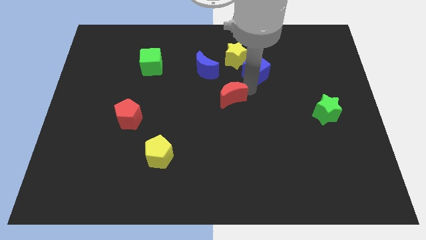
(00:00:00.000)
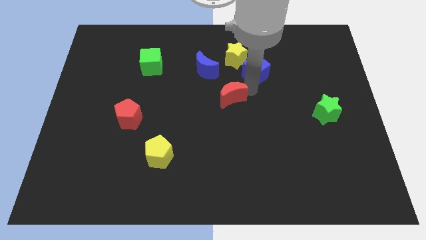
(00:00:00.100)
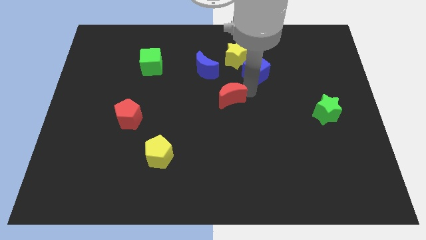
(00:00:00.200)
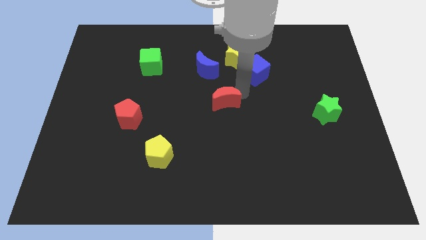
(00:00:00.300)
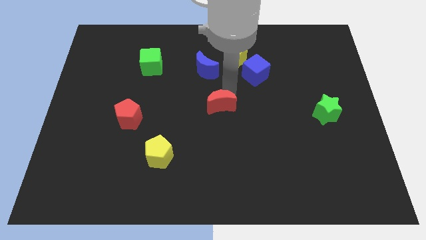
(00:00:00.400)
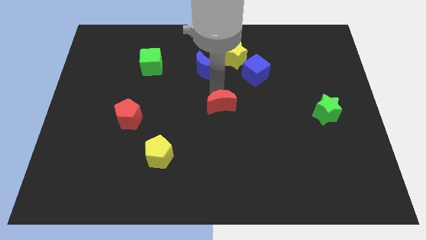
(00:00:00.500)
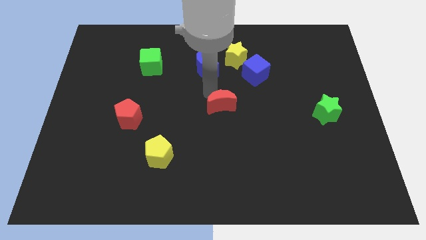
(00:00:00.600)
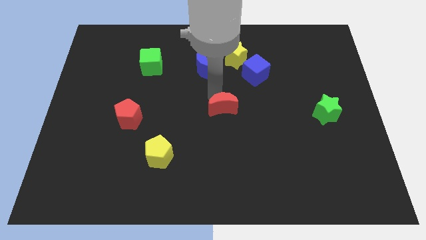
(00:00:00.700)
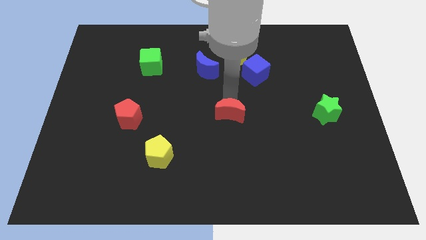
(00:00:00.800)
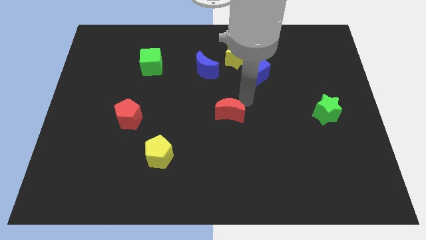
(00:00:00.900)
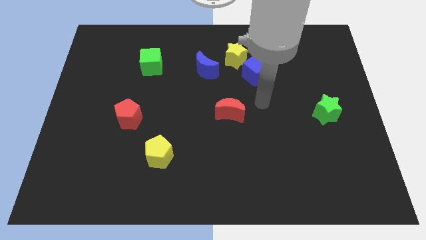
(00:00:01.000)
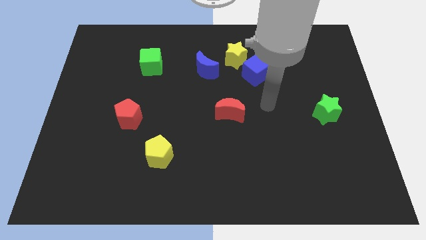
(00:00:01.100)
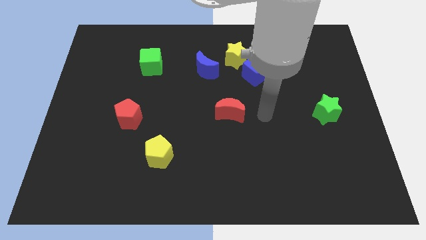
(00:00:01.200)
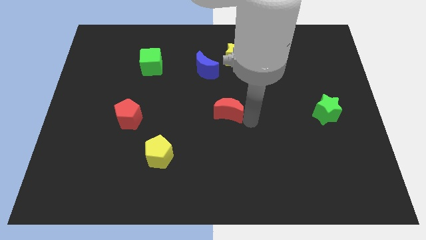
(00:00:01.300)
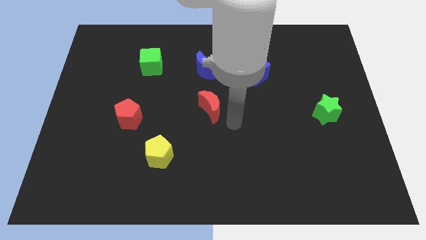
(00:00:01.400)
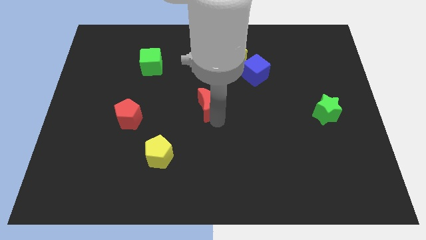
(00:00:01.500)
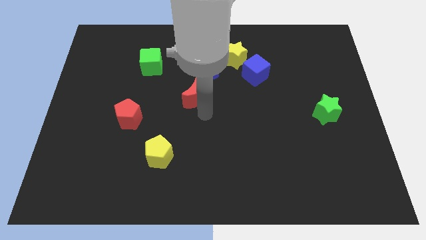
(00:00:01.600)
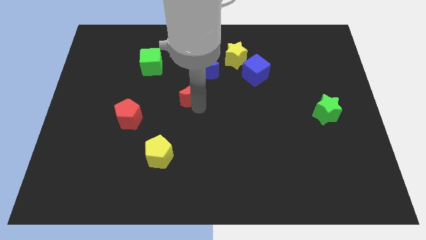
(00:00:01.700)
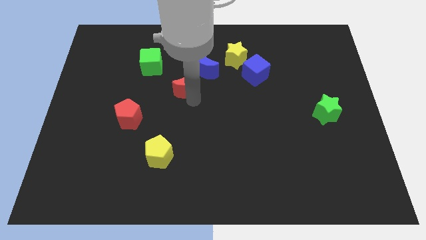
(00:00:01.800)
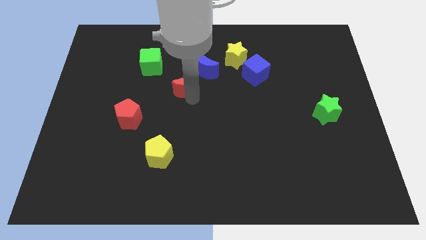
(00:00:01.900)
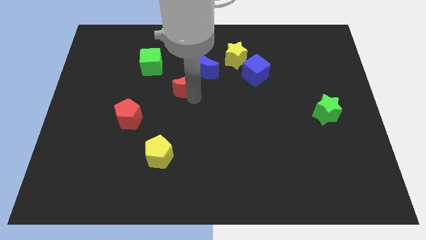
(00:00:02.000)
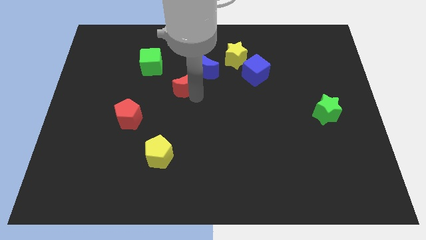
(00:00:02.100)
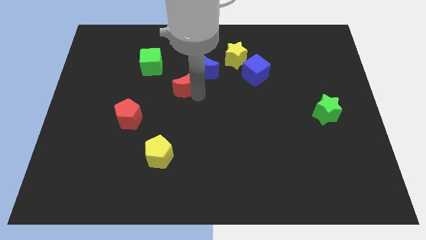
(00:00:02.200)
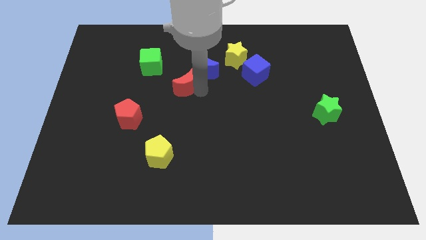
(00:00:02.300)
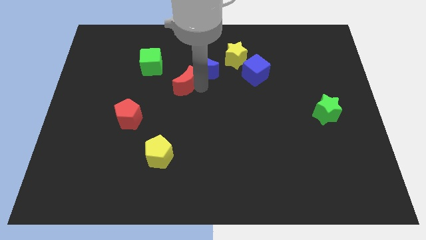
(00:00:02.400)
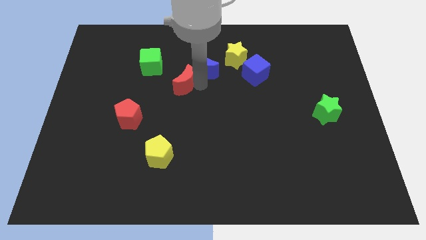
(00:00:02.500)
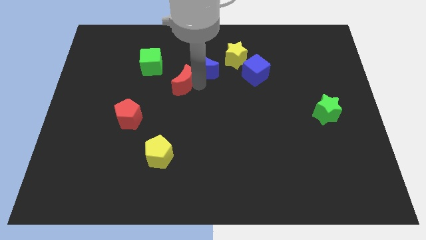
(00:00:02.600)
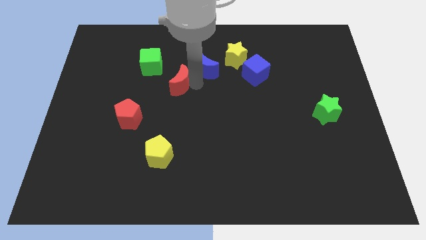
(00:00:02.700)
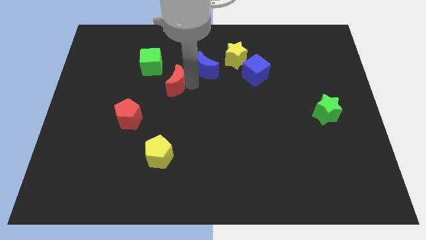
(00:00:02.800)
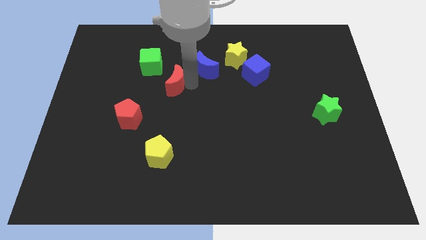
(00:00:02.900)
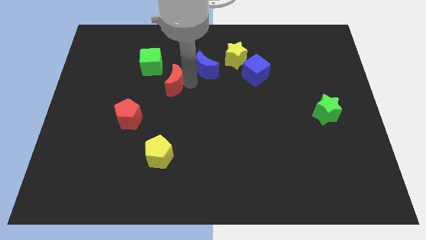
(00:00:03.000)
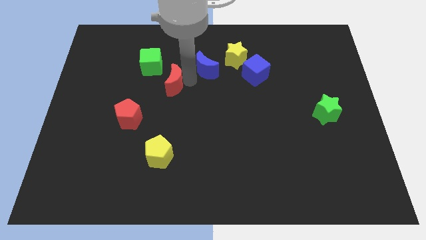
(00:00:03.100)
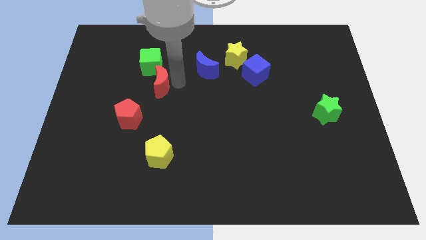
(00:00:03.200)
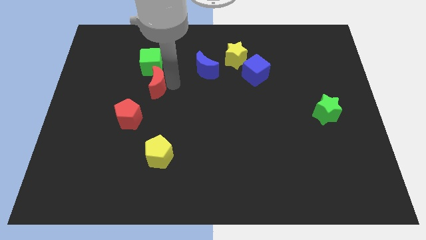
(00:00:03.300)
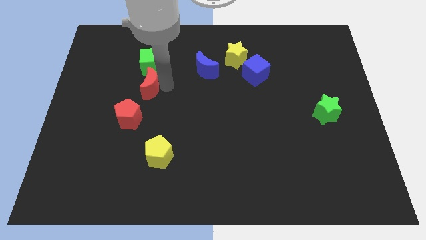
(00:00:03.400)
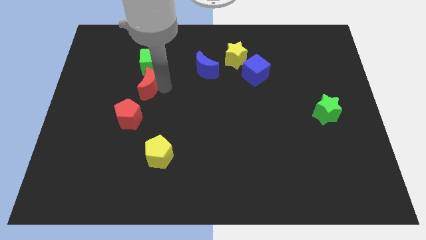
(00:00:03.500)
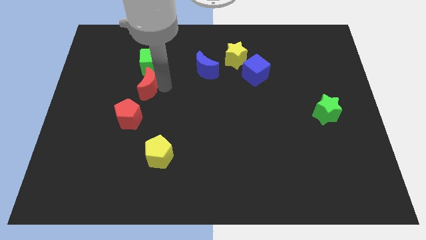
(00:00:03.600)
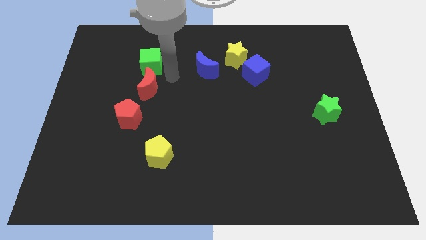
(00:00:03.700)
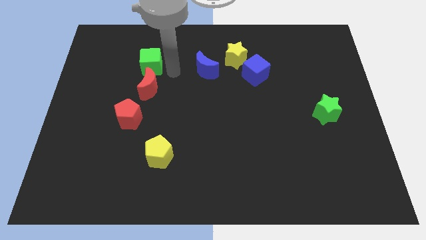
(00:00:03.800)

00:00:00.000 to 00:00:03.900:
place red moon to the bottom of green cube

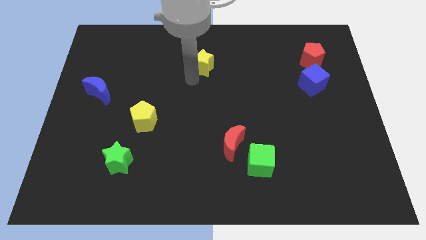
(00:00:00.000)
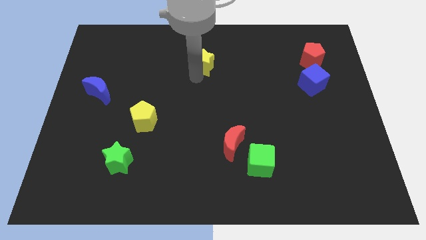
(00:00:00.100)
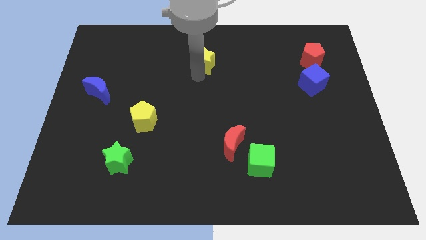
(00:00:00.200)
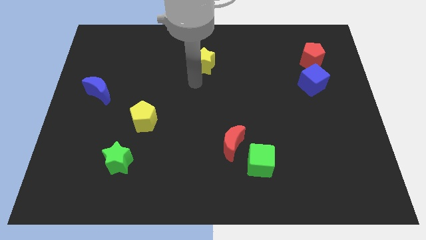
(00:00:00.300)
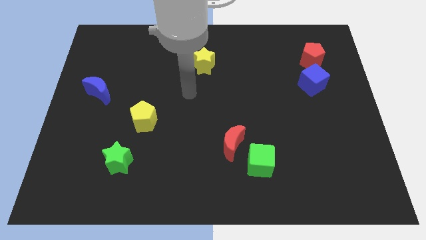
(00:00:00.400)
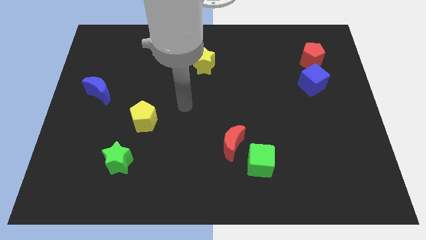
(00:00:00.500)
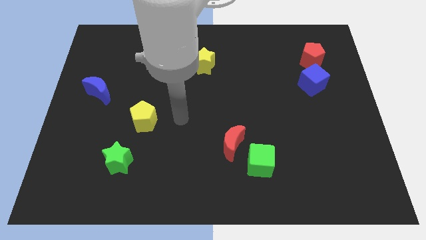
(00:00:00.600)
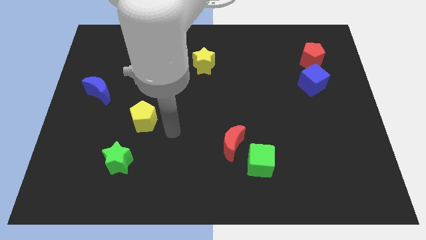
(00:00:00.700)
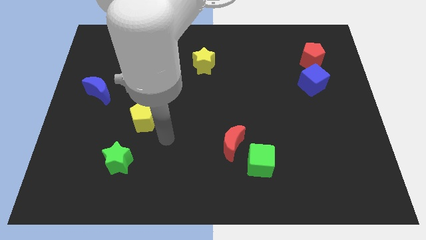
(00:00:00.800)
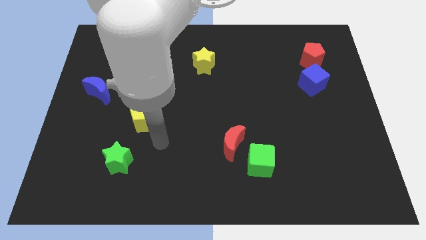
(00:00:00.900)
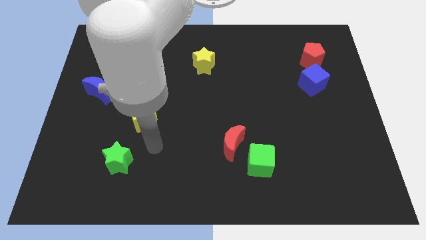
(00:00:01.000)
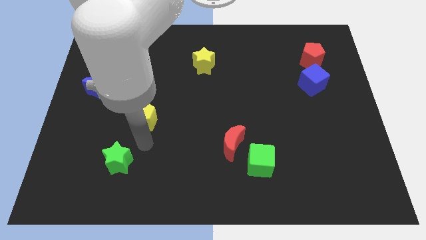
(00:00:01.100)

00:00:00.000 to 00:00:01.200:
move your arm away from the yellow star

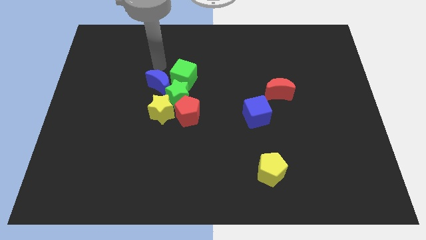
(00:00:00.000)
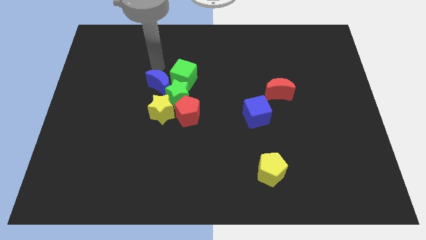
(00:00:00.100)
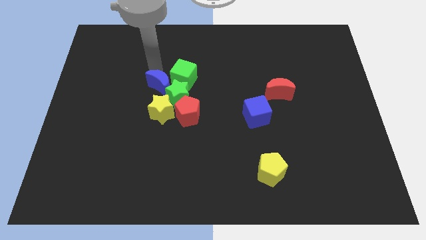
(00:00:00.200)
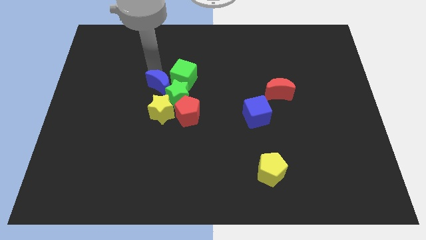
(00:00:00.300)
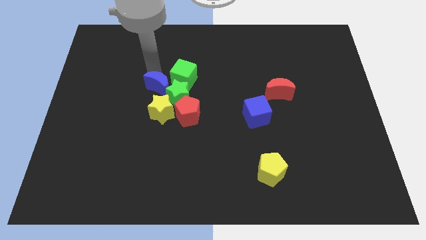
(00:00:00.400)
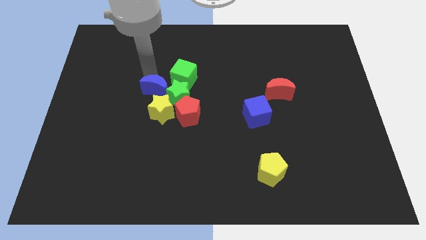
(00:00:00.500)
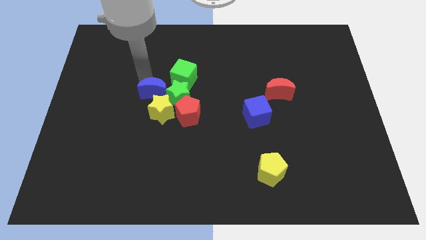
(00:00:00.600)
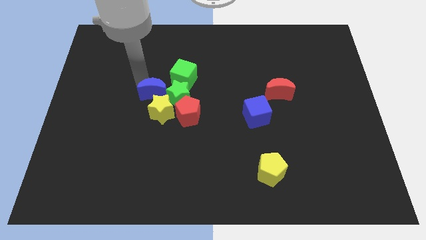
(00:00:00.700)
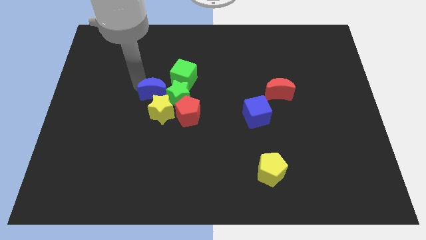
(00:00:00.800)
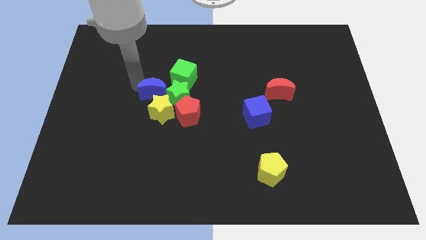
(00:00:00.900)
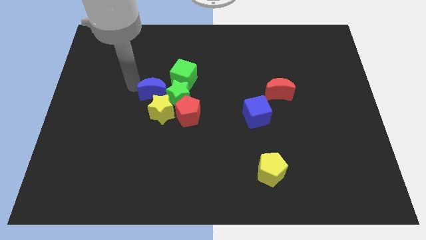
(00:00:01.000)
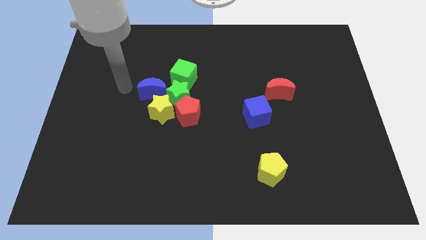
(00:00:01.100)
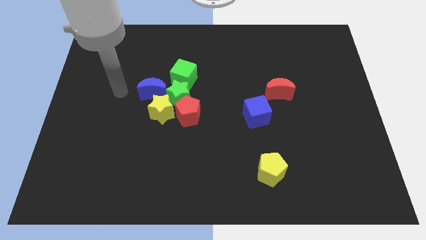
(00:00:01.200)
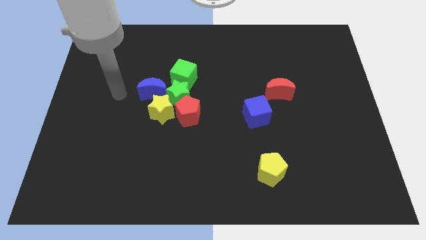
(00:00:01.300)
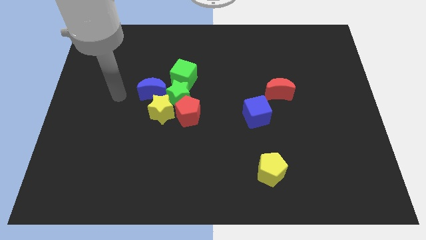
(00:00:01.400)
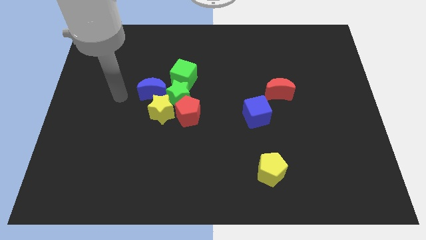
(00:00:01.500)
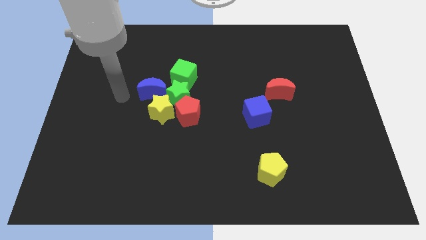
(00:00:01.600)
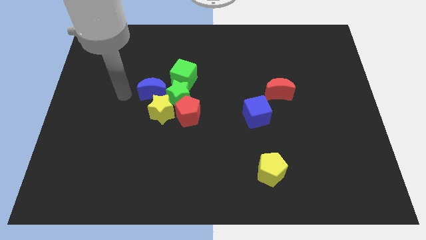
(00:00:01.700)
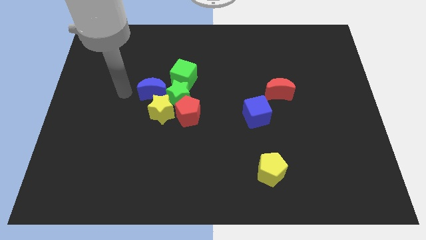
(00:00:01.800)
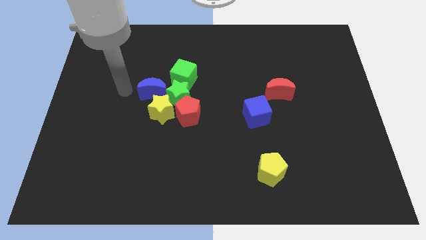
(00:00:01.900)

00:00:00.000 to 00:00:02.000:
move the blue moon towards the yellow star

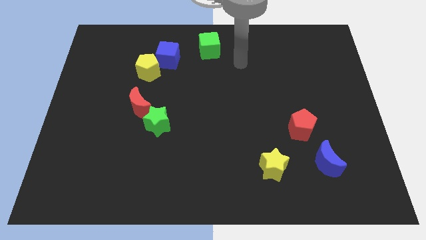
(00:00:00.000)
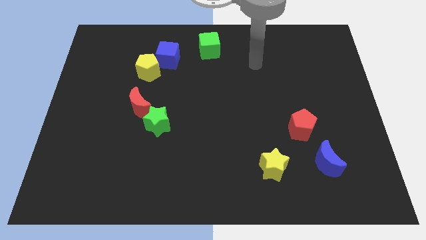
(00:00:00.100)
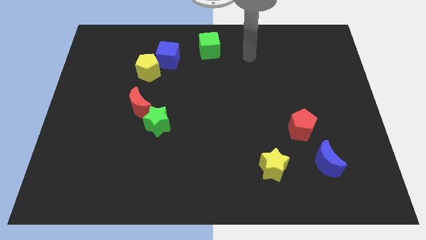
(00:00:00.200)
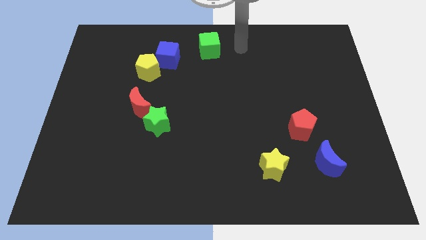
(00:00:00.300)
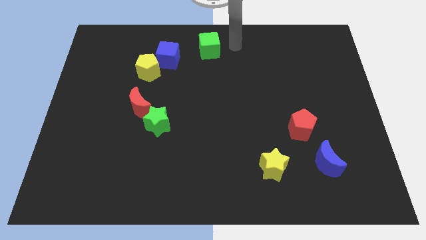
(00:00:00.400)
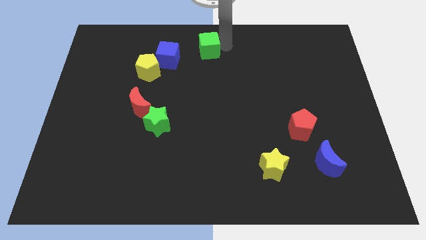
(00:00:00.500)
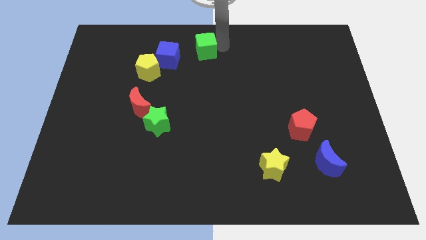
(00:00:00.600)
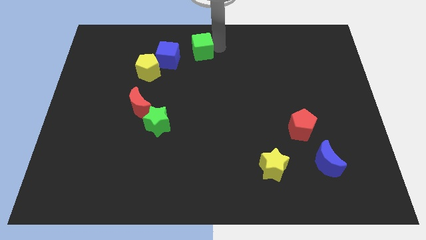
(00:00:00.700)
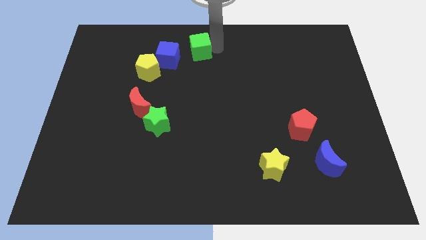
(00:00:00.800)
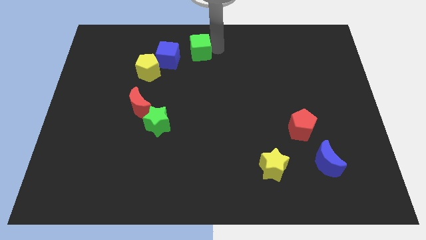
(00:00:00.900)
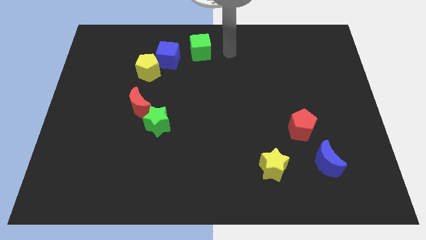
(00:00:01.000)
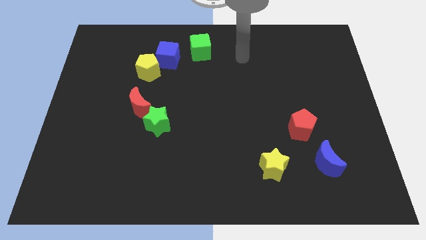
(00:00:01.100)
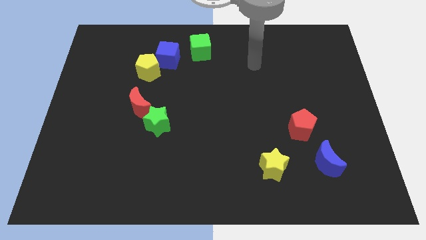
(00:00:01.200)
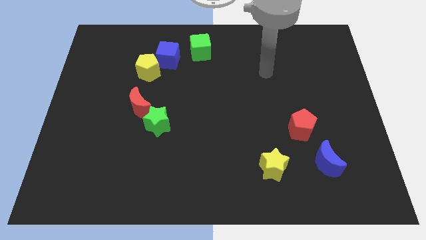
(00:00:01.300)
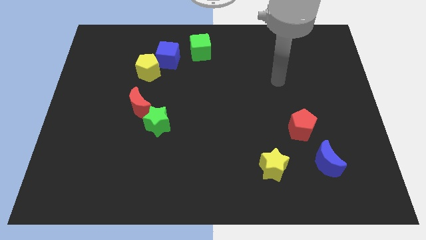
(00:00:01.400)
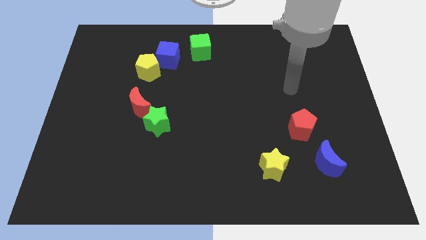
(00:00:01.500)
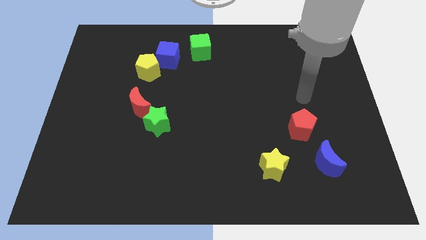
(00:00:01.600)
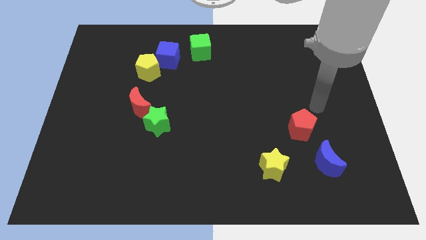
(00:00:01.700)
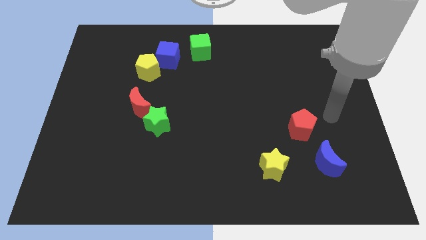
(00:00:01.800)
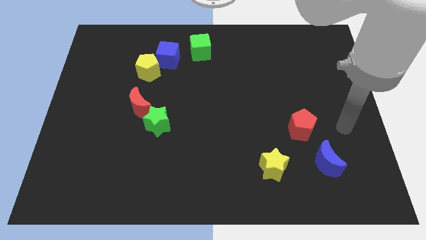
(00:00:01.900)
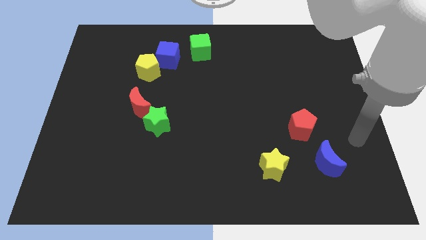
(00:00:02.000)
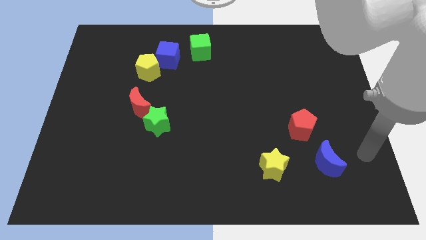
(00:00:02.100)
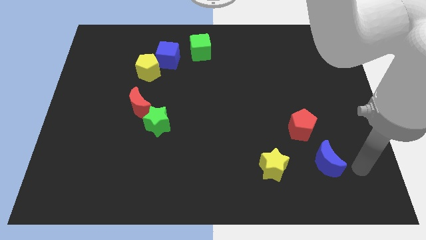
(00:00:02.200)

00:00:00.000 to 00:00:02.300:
slightly adjust the green cube towards the right of the blue cube
